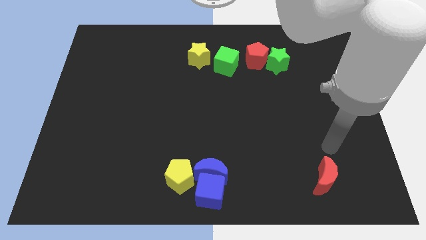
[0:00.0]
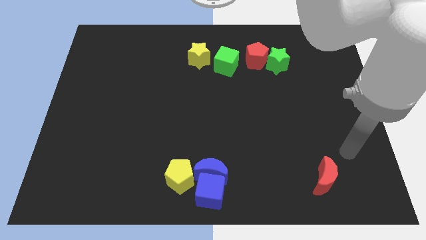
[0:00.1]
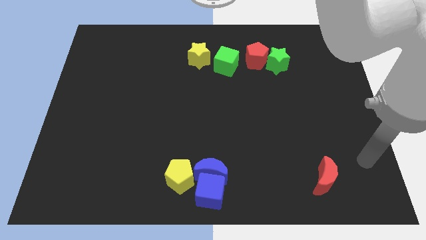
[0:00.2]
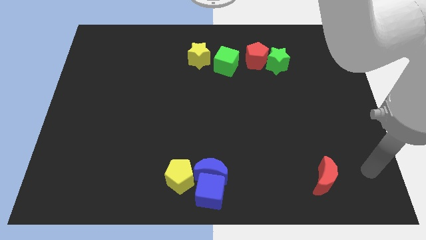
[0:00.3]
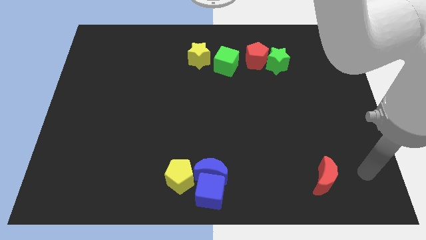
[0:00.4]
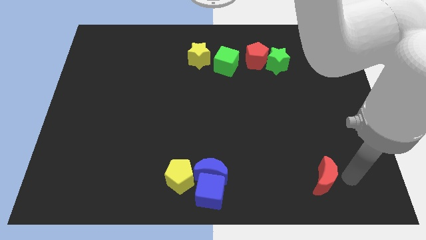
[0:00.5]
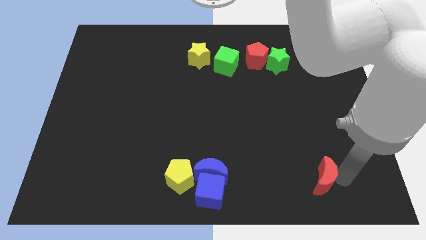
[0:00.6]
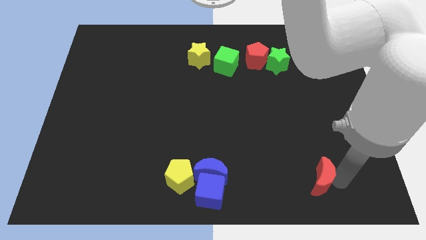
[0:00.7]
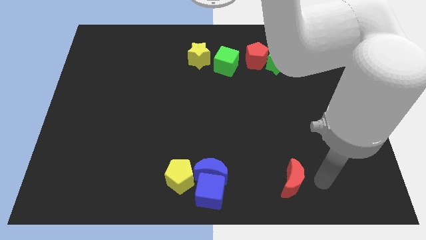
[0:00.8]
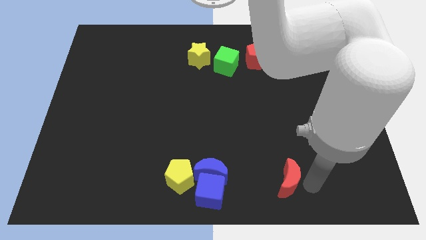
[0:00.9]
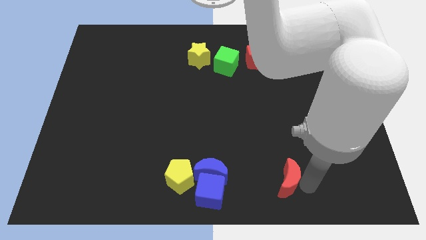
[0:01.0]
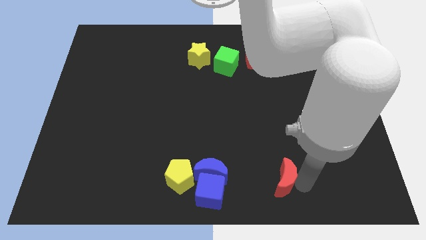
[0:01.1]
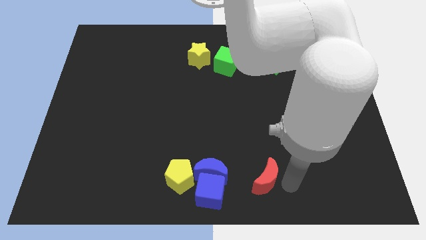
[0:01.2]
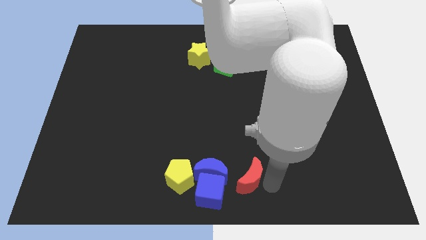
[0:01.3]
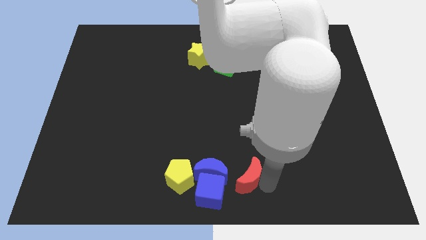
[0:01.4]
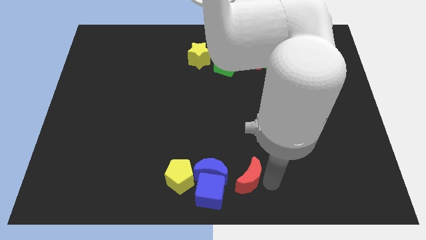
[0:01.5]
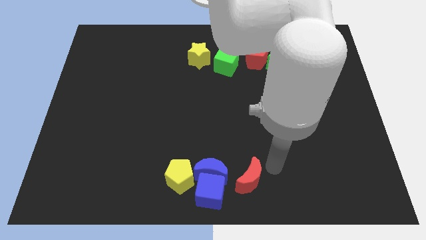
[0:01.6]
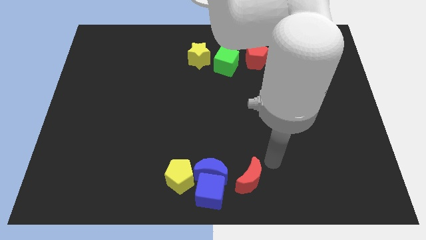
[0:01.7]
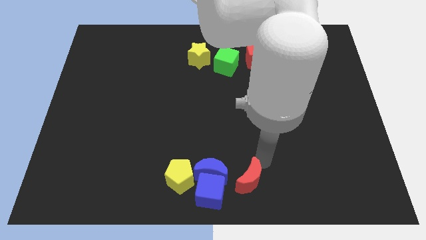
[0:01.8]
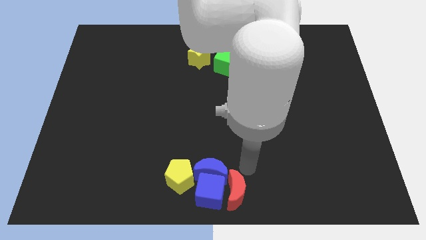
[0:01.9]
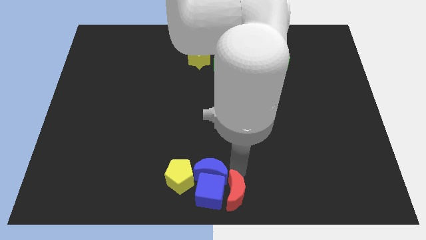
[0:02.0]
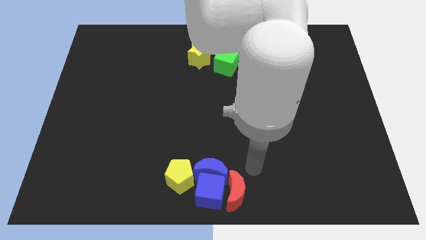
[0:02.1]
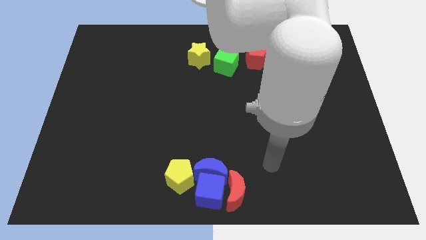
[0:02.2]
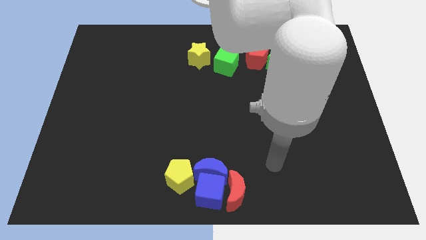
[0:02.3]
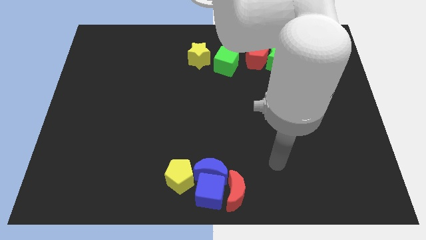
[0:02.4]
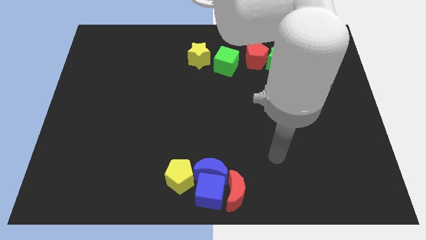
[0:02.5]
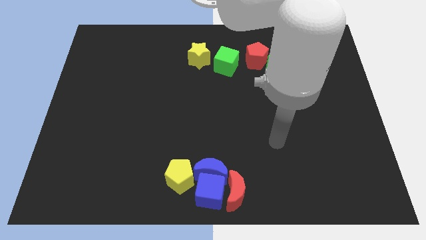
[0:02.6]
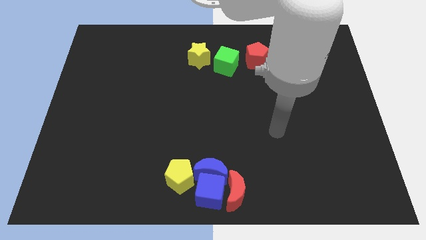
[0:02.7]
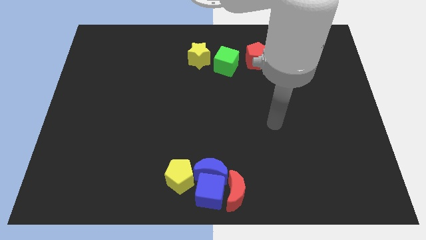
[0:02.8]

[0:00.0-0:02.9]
move the red crescent towards the blue cube

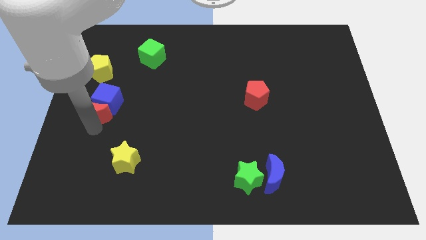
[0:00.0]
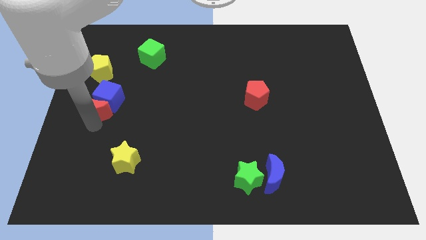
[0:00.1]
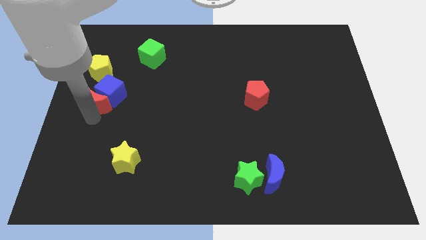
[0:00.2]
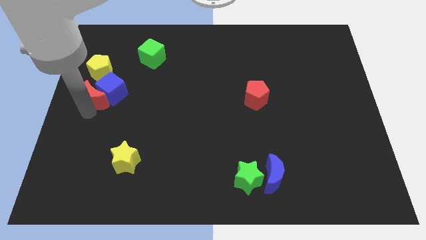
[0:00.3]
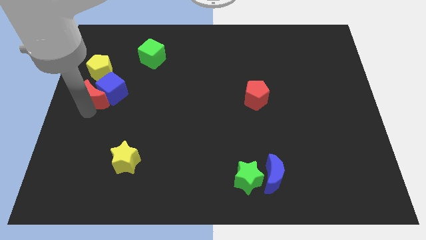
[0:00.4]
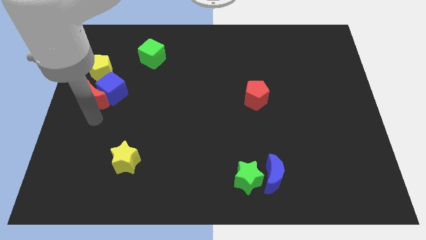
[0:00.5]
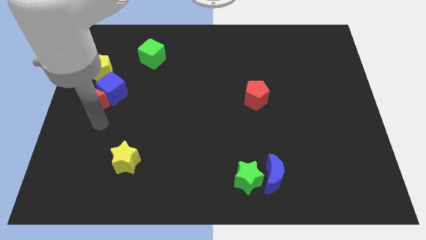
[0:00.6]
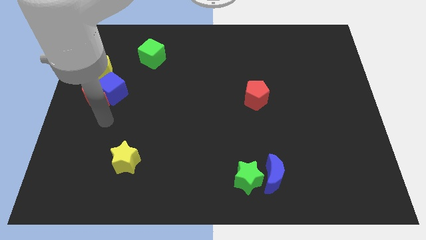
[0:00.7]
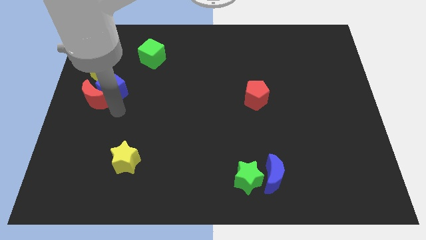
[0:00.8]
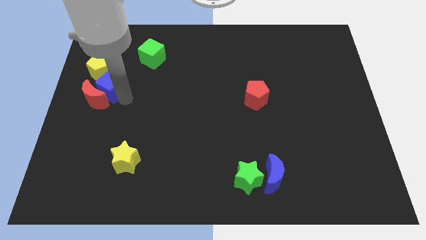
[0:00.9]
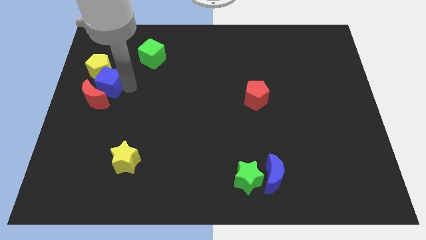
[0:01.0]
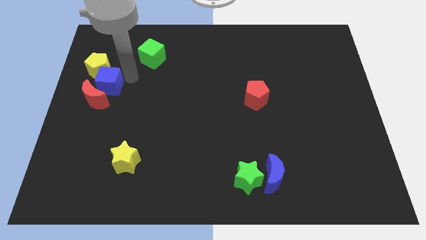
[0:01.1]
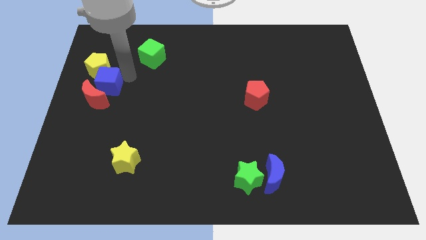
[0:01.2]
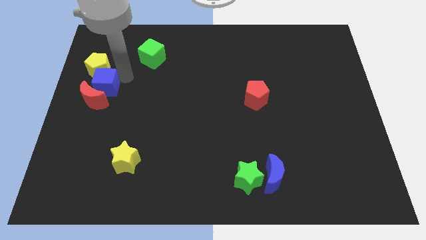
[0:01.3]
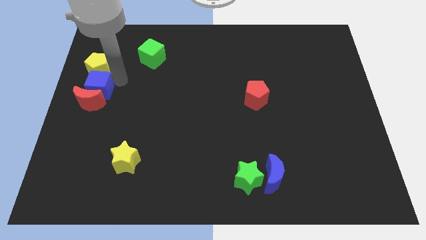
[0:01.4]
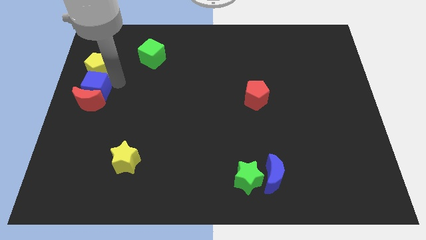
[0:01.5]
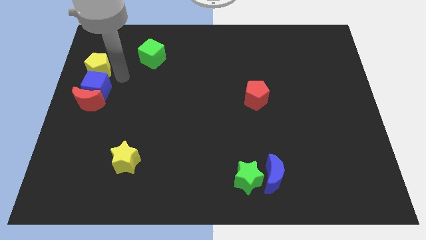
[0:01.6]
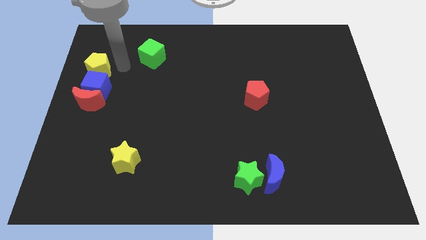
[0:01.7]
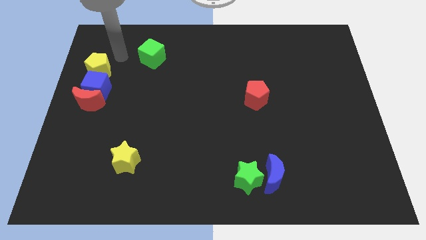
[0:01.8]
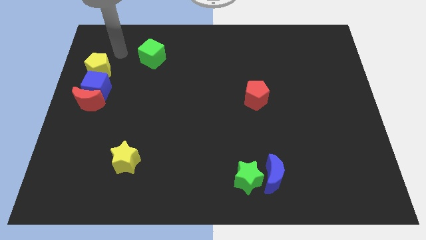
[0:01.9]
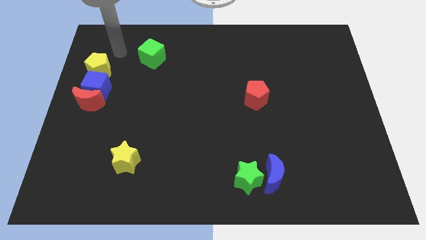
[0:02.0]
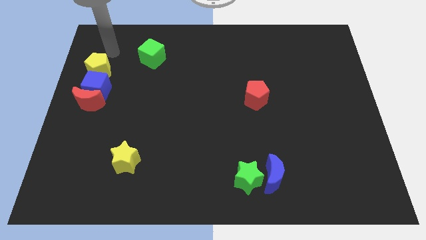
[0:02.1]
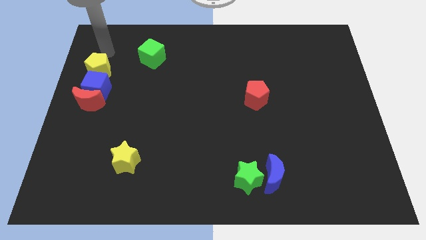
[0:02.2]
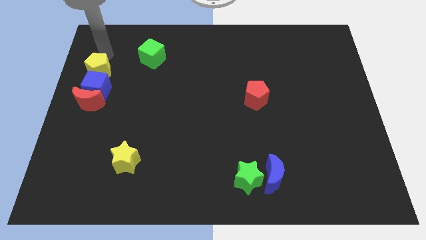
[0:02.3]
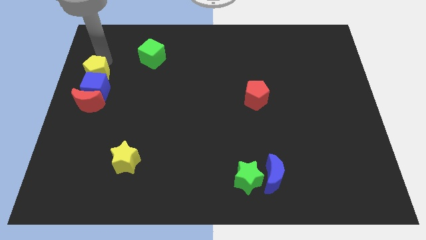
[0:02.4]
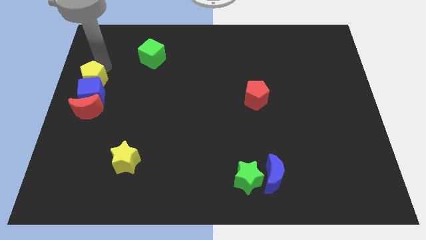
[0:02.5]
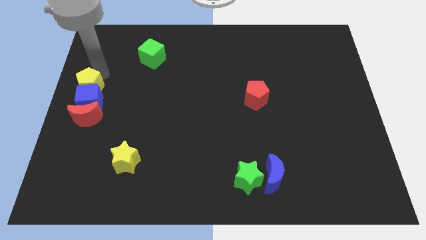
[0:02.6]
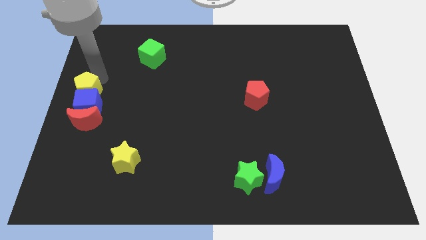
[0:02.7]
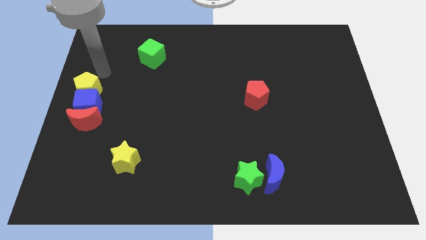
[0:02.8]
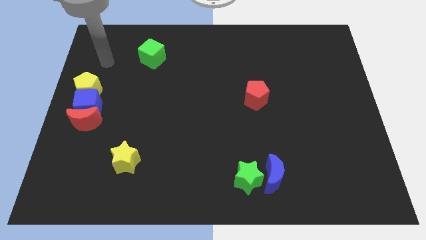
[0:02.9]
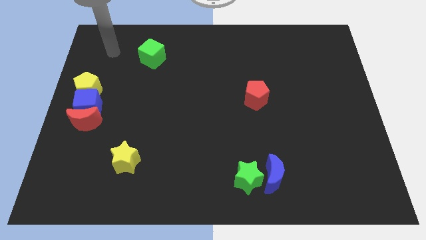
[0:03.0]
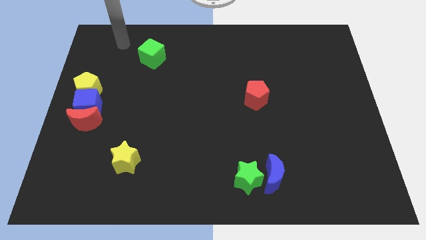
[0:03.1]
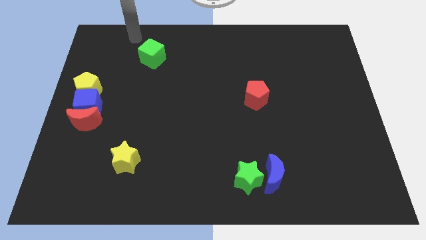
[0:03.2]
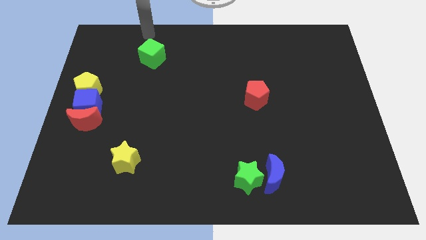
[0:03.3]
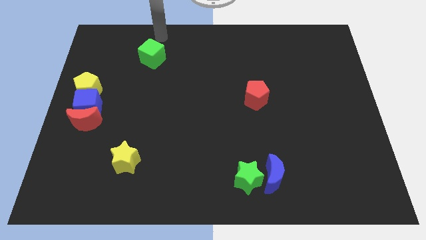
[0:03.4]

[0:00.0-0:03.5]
place the yellow pentagon blue cube and red crescent at the center left of the board

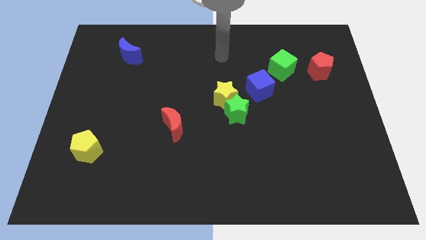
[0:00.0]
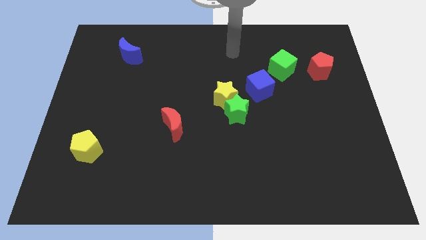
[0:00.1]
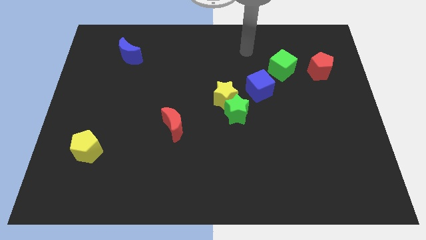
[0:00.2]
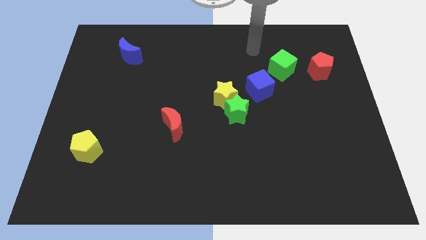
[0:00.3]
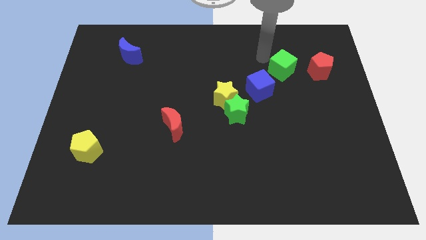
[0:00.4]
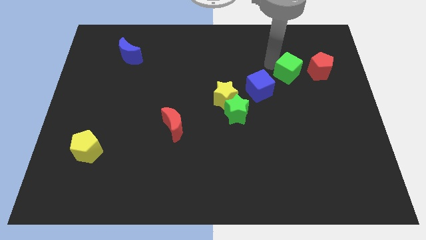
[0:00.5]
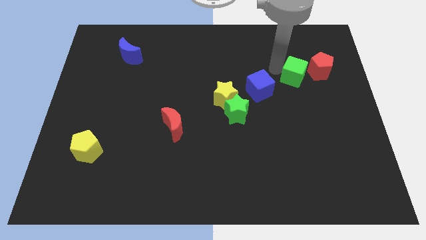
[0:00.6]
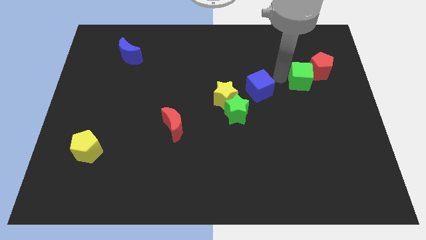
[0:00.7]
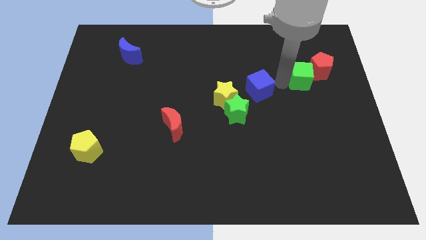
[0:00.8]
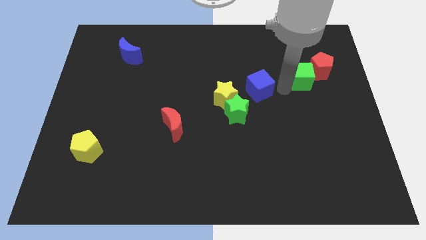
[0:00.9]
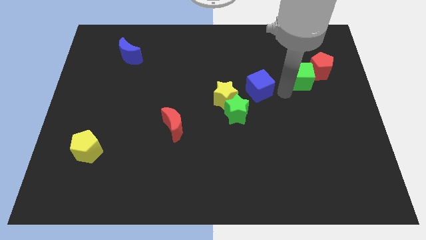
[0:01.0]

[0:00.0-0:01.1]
place the green cube right to the blue cube

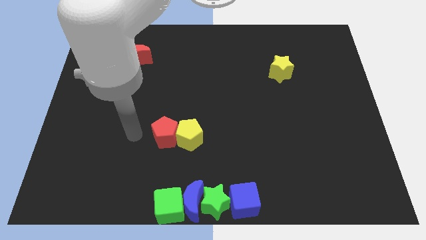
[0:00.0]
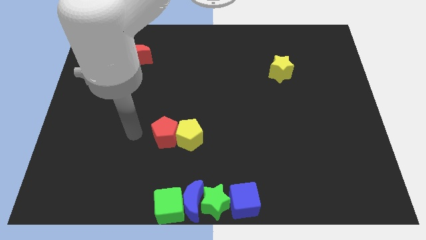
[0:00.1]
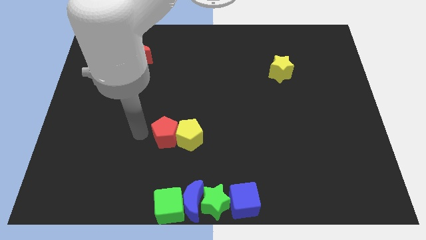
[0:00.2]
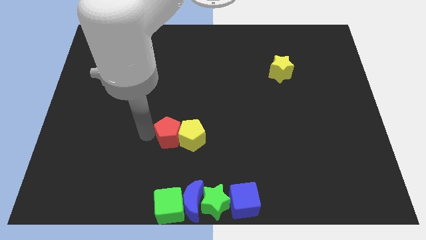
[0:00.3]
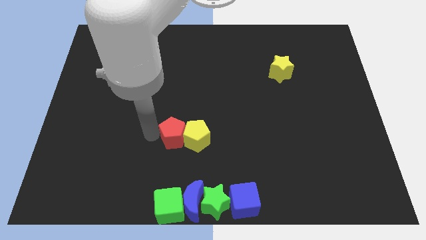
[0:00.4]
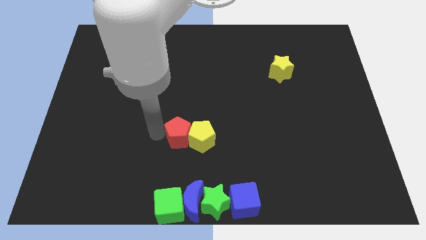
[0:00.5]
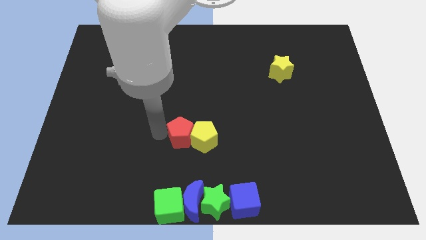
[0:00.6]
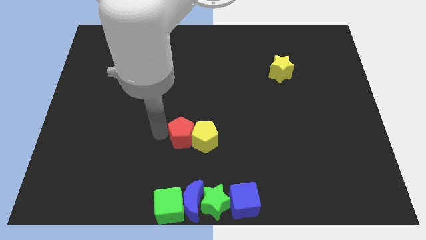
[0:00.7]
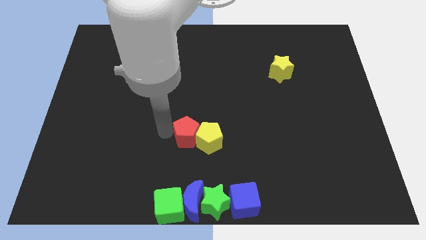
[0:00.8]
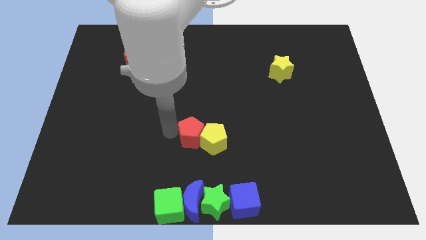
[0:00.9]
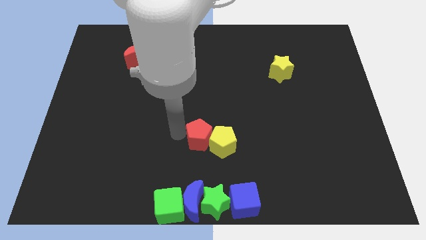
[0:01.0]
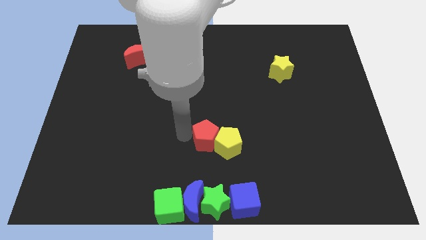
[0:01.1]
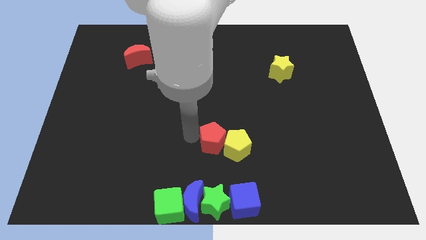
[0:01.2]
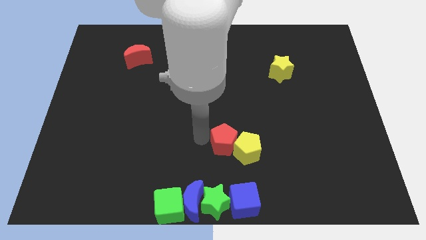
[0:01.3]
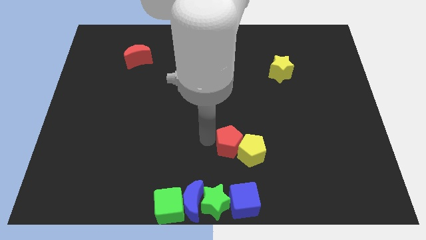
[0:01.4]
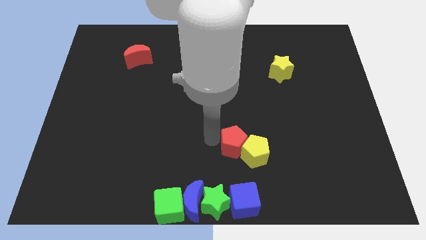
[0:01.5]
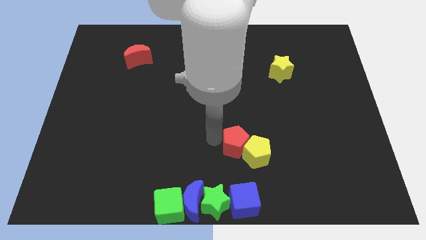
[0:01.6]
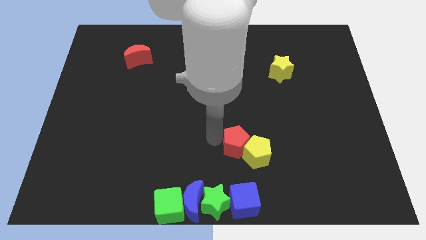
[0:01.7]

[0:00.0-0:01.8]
move the pentagons to the right of the board
